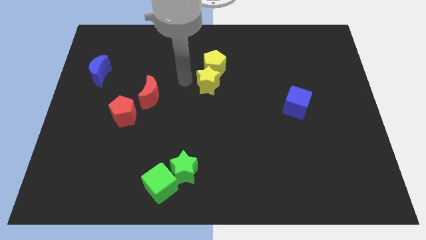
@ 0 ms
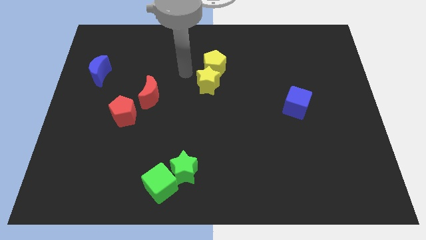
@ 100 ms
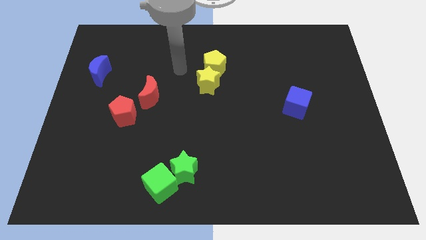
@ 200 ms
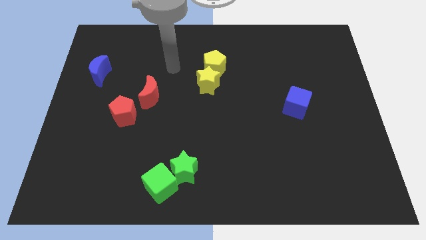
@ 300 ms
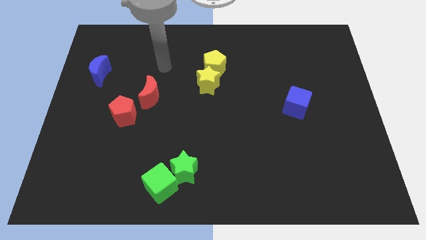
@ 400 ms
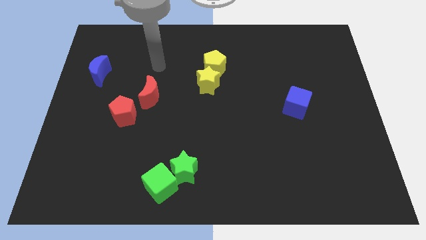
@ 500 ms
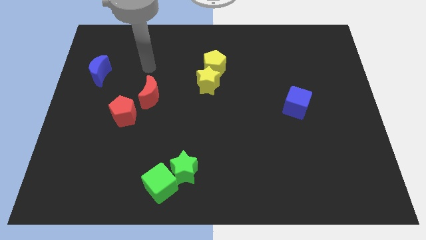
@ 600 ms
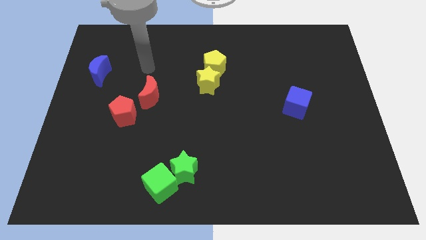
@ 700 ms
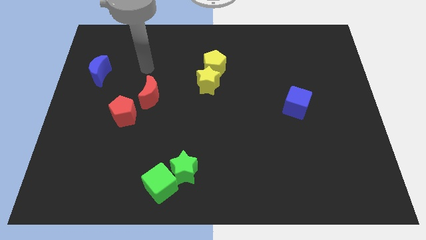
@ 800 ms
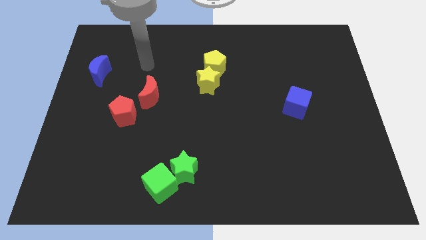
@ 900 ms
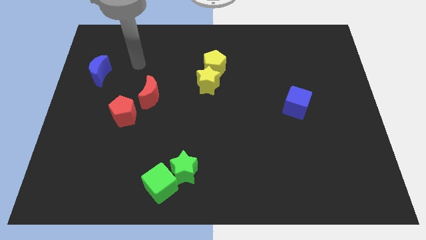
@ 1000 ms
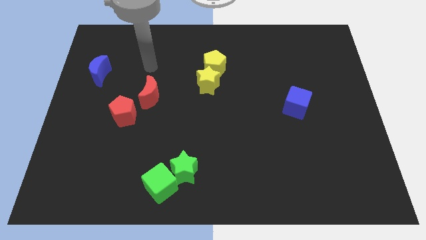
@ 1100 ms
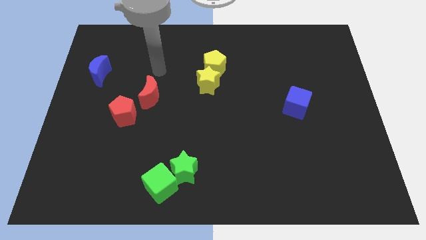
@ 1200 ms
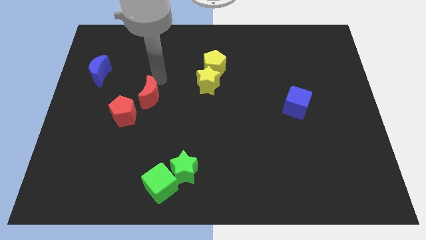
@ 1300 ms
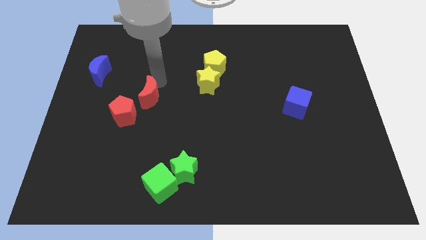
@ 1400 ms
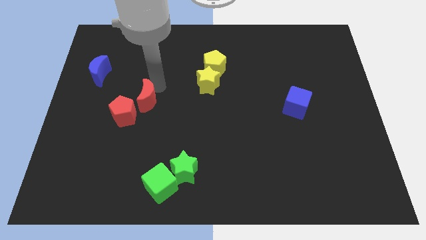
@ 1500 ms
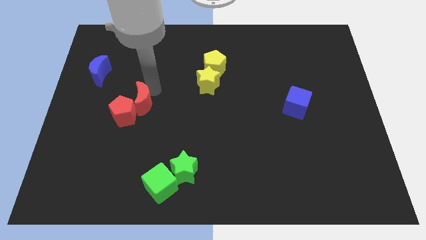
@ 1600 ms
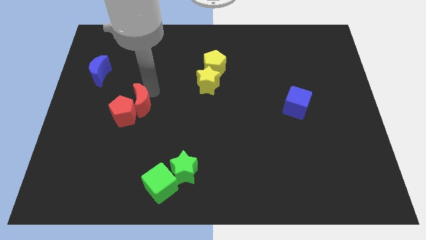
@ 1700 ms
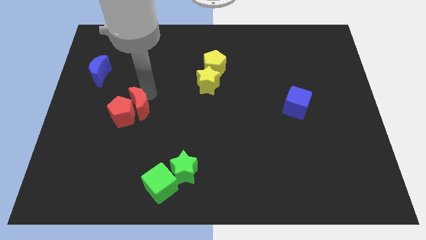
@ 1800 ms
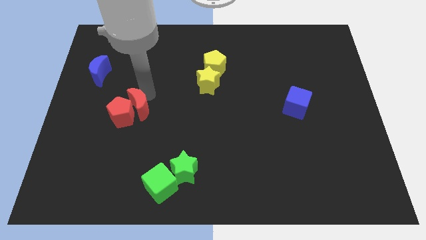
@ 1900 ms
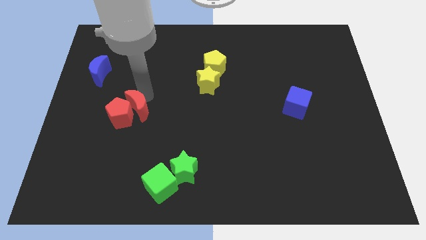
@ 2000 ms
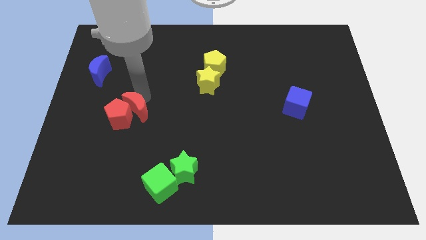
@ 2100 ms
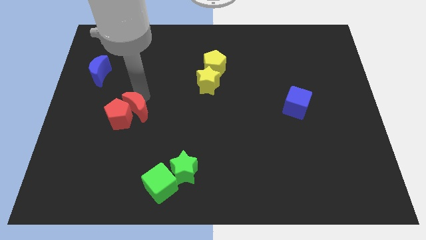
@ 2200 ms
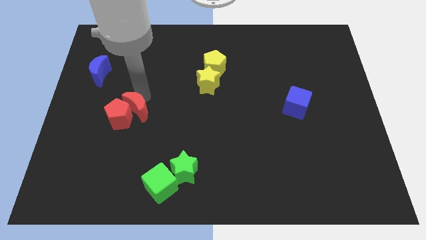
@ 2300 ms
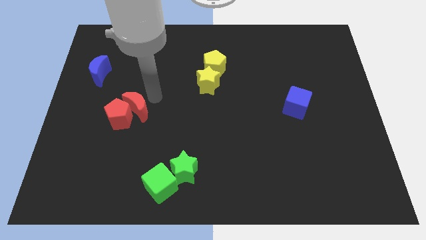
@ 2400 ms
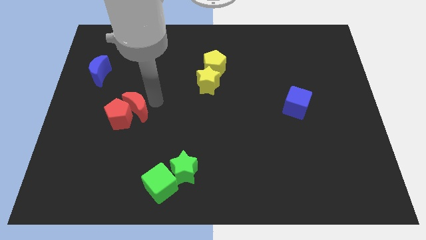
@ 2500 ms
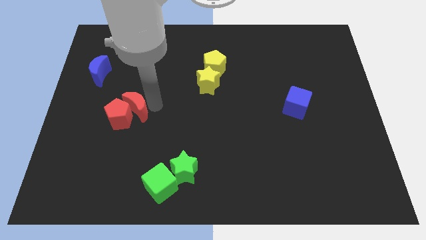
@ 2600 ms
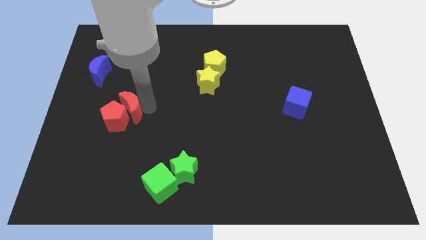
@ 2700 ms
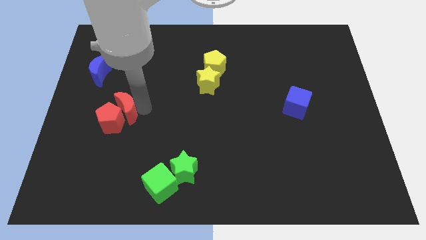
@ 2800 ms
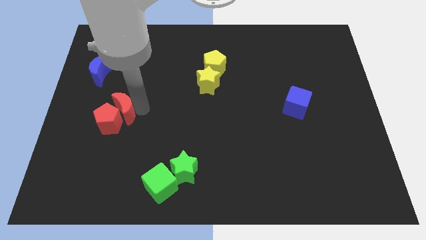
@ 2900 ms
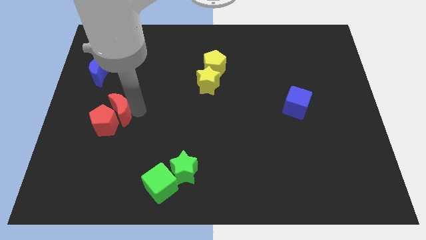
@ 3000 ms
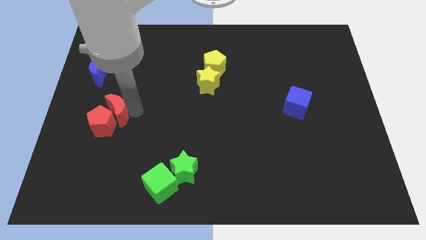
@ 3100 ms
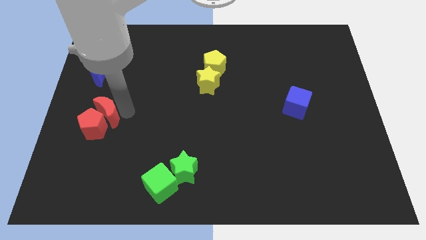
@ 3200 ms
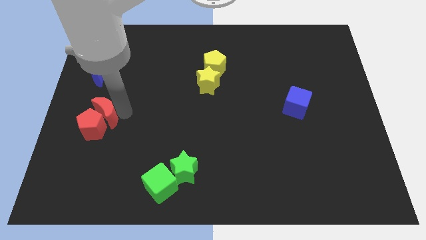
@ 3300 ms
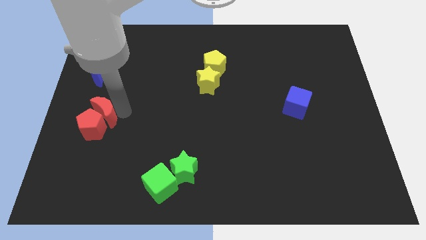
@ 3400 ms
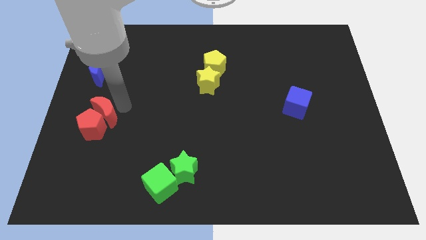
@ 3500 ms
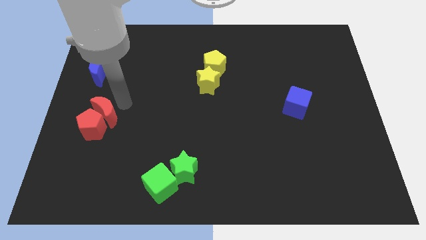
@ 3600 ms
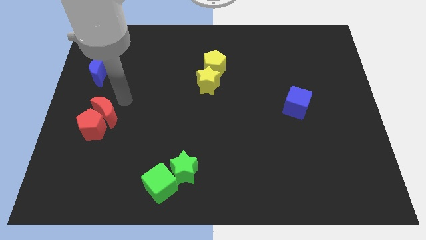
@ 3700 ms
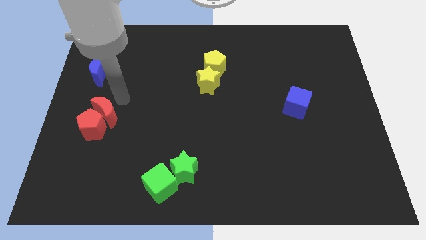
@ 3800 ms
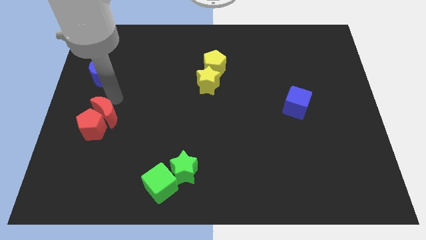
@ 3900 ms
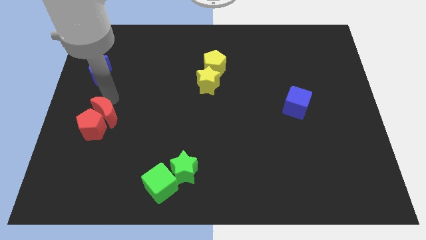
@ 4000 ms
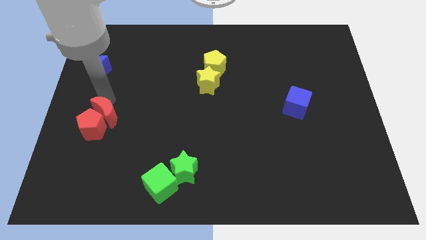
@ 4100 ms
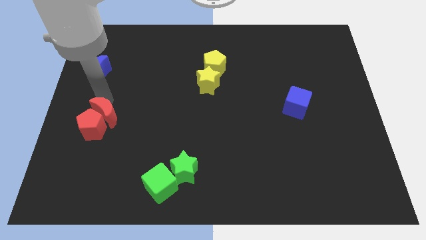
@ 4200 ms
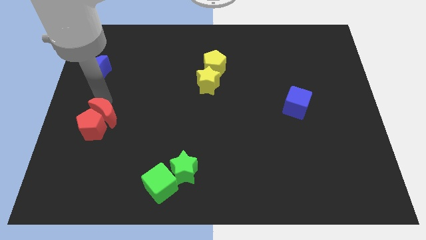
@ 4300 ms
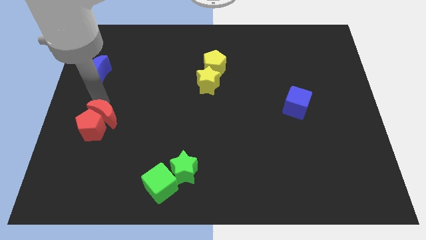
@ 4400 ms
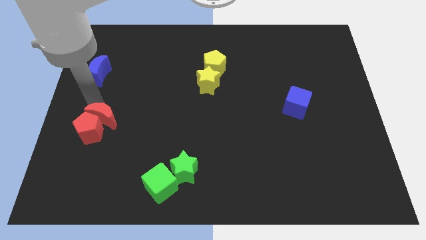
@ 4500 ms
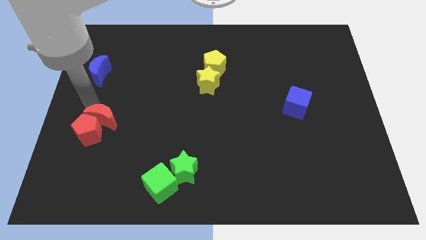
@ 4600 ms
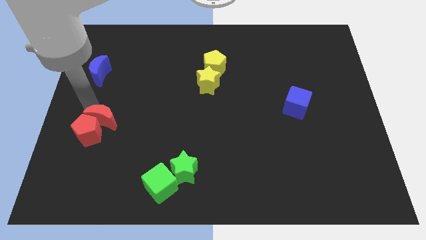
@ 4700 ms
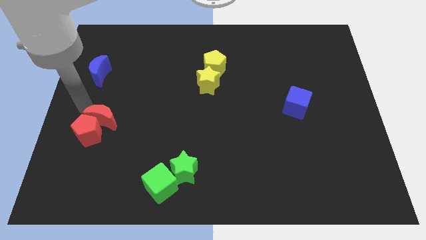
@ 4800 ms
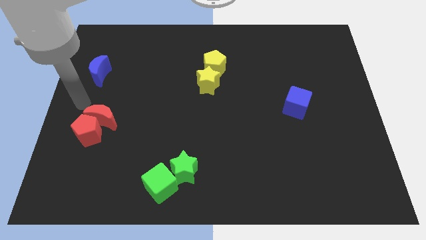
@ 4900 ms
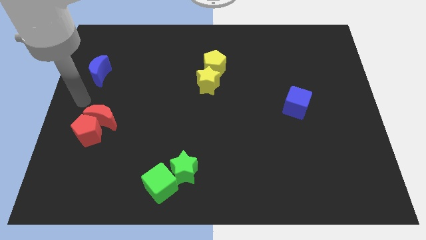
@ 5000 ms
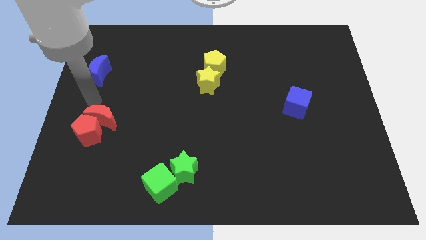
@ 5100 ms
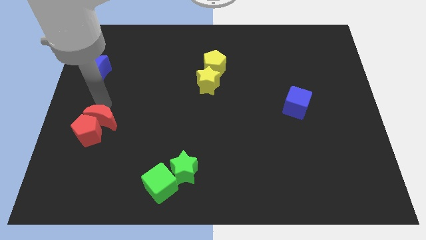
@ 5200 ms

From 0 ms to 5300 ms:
place the red blocks to bottom of the blue crescent

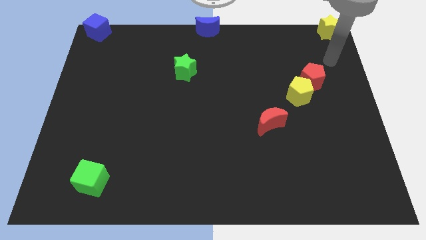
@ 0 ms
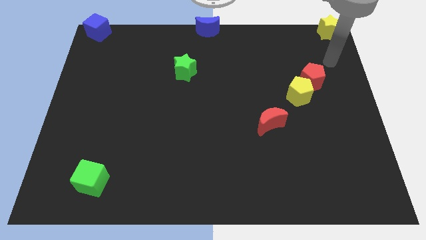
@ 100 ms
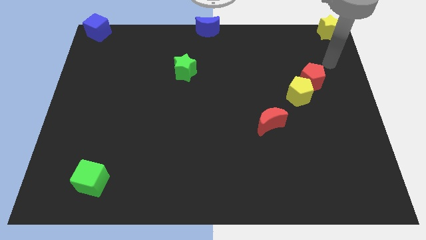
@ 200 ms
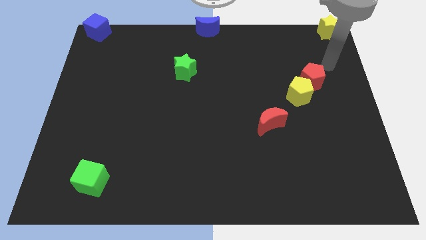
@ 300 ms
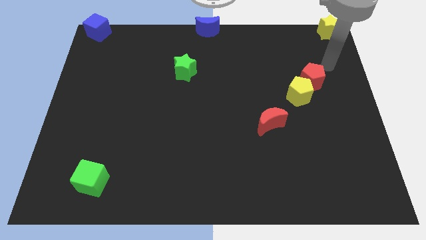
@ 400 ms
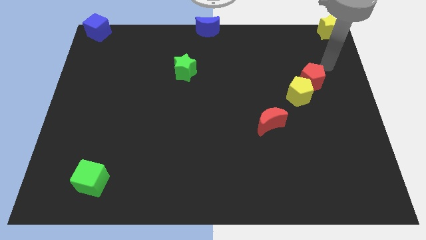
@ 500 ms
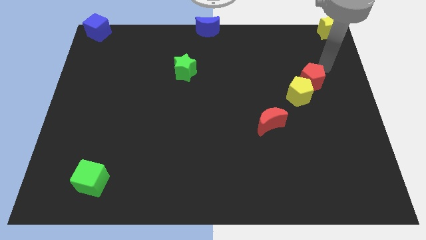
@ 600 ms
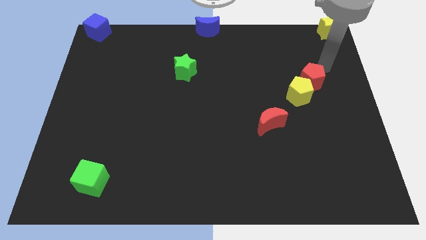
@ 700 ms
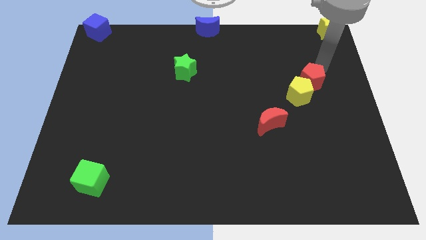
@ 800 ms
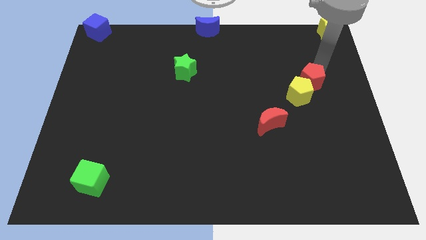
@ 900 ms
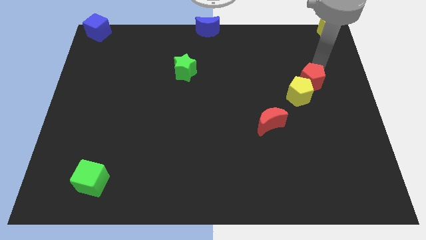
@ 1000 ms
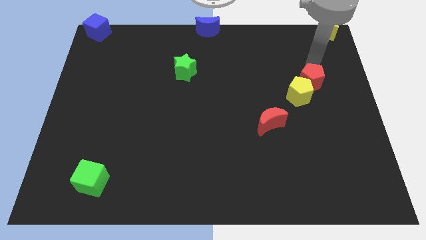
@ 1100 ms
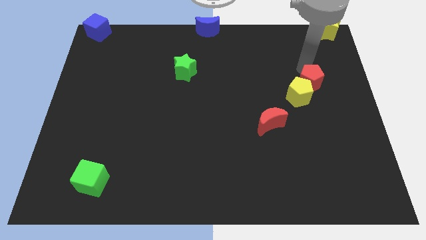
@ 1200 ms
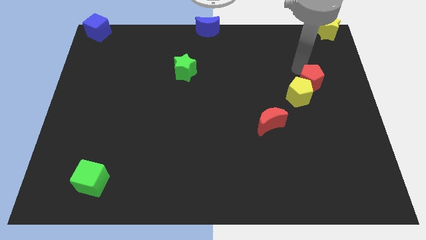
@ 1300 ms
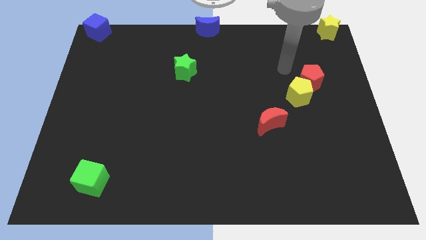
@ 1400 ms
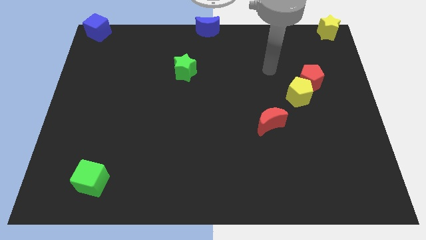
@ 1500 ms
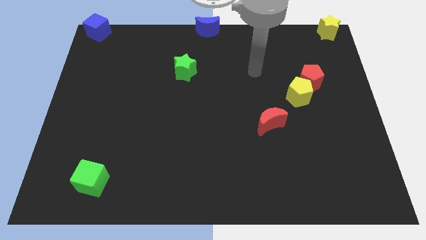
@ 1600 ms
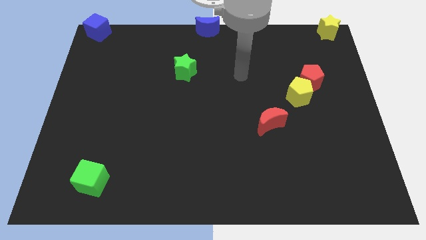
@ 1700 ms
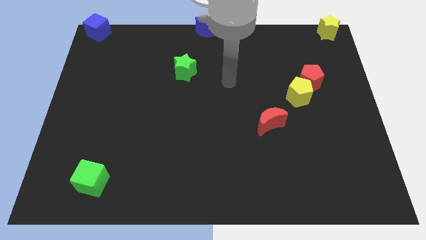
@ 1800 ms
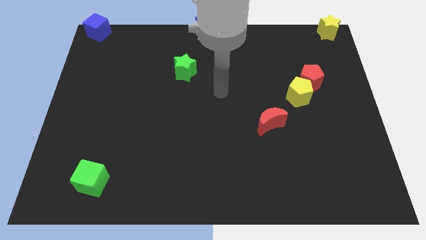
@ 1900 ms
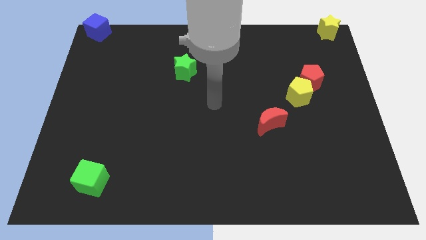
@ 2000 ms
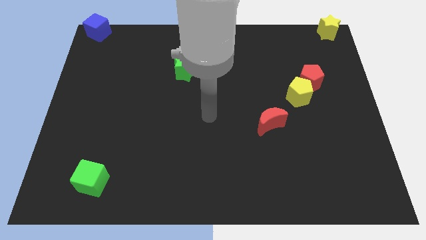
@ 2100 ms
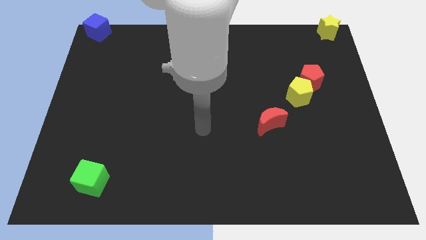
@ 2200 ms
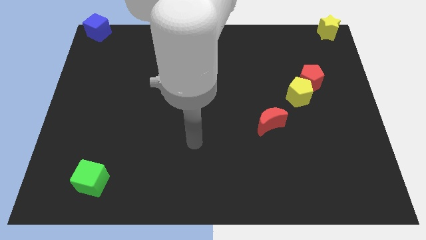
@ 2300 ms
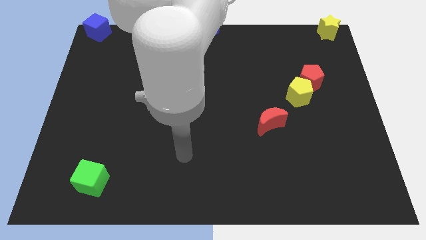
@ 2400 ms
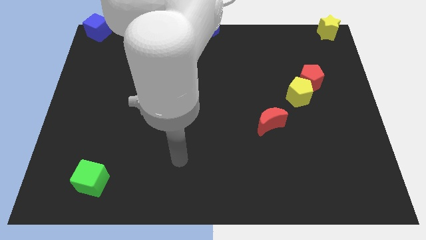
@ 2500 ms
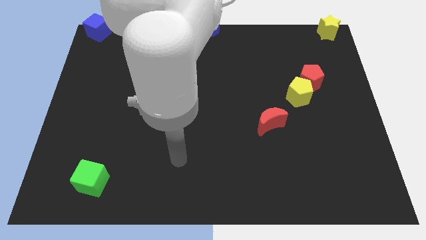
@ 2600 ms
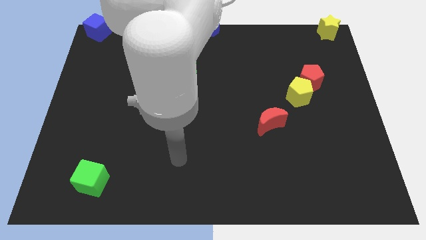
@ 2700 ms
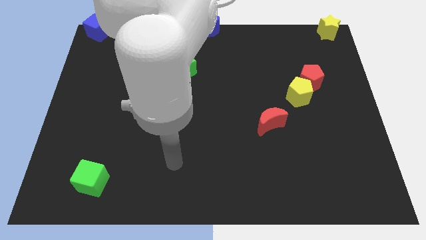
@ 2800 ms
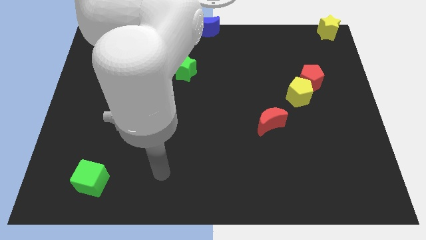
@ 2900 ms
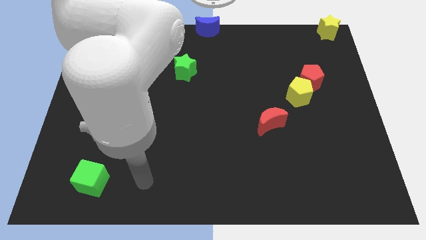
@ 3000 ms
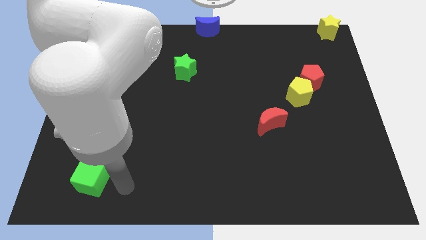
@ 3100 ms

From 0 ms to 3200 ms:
touch the red pentagon

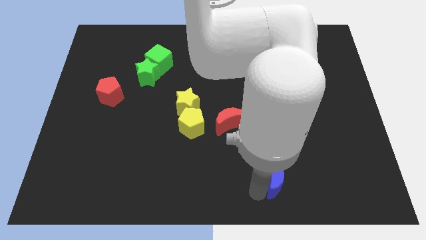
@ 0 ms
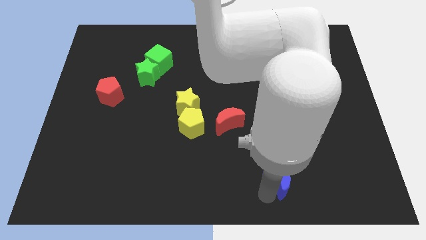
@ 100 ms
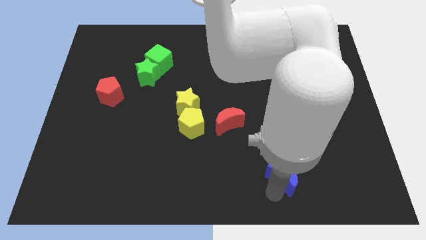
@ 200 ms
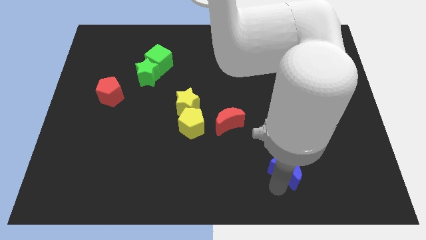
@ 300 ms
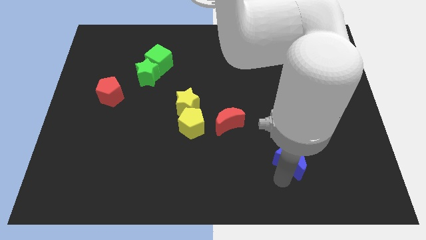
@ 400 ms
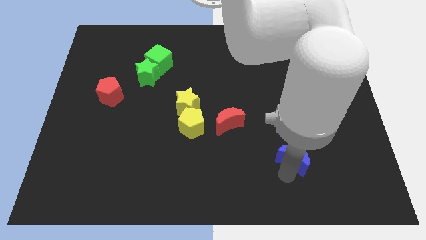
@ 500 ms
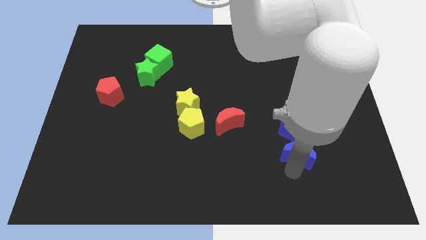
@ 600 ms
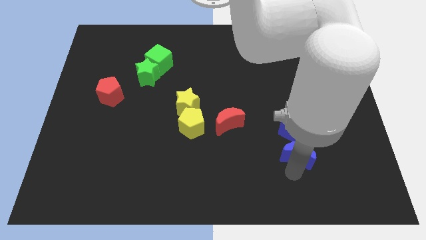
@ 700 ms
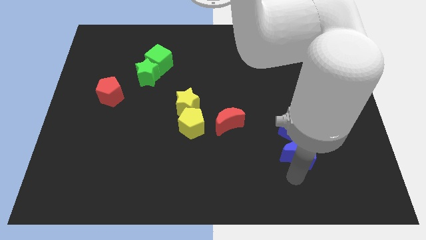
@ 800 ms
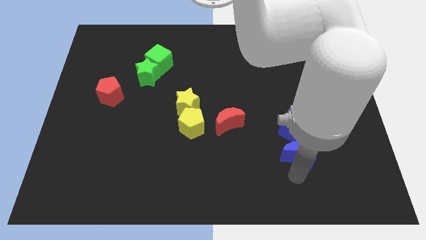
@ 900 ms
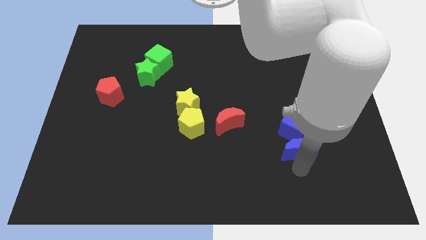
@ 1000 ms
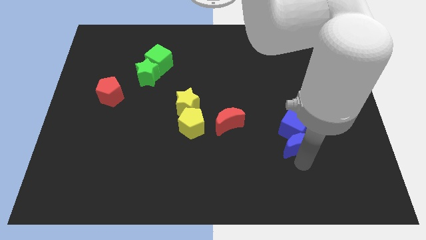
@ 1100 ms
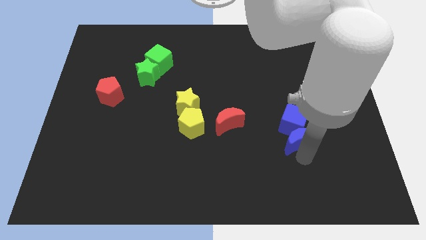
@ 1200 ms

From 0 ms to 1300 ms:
push the blue crescent to the bottom of the blue cube
